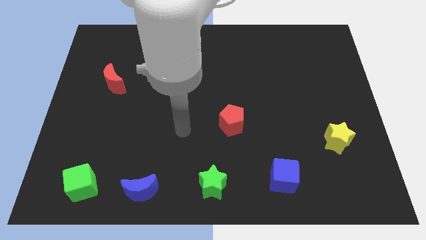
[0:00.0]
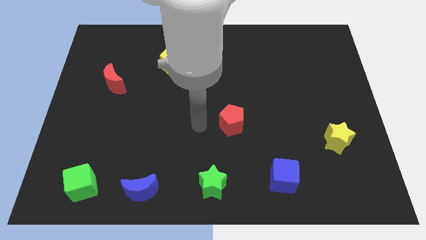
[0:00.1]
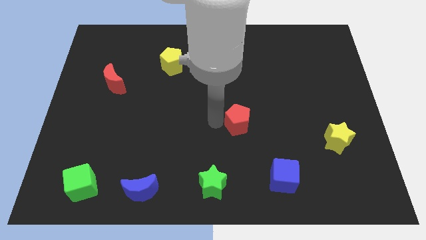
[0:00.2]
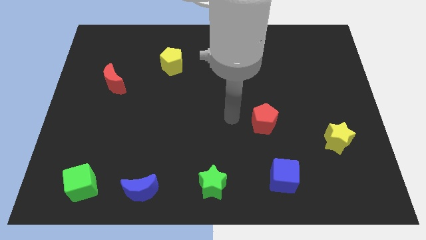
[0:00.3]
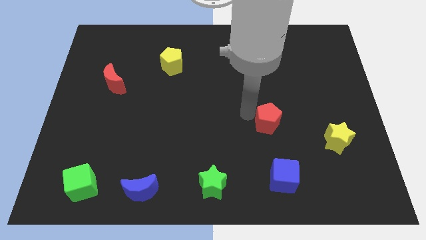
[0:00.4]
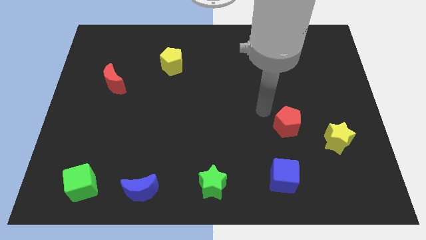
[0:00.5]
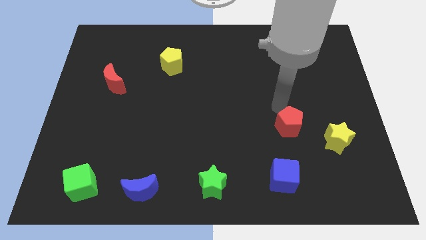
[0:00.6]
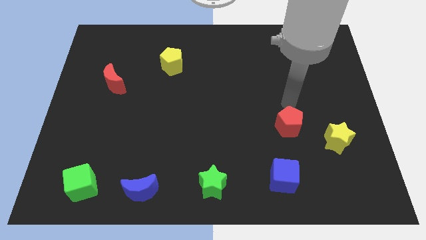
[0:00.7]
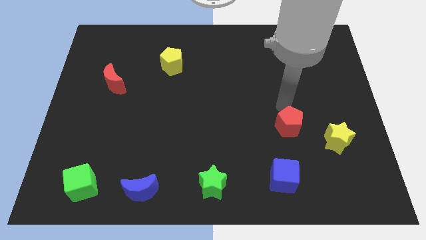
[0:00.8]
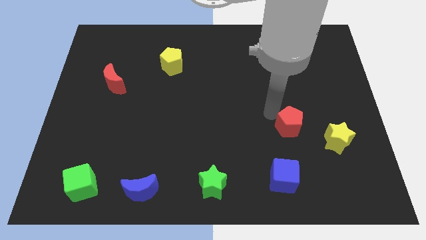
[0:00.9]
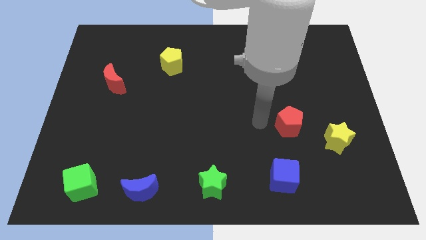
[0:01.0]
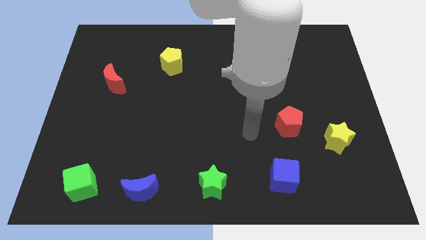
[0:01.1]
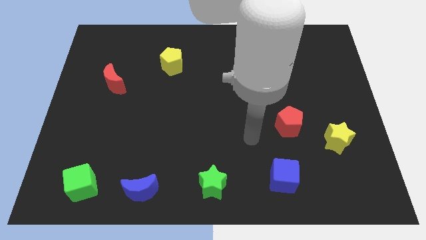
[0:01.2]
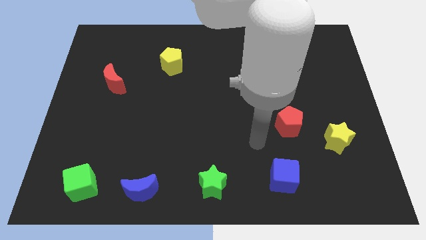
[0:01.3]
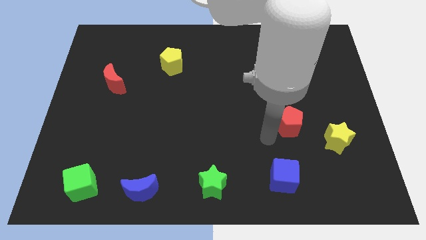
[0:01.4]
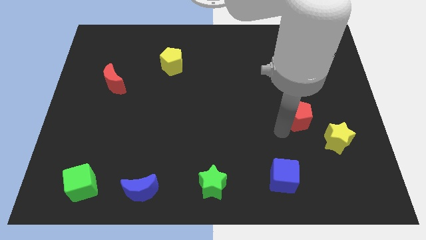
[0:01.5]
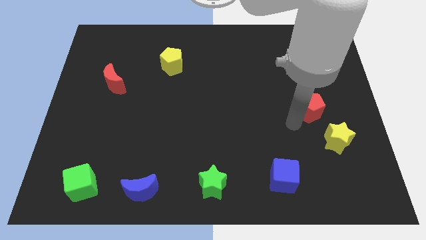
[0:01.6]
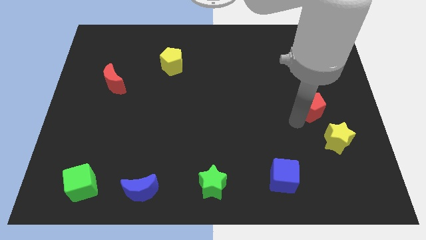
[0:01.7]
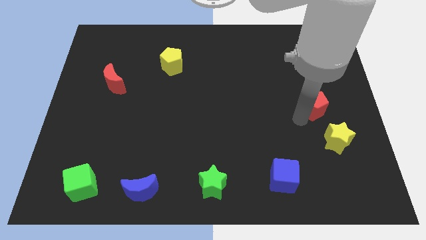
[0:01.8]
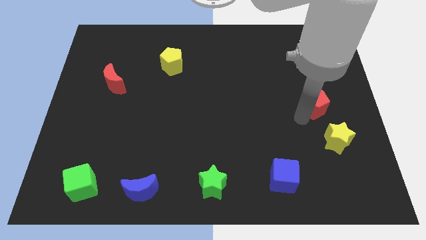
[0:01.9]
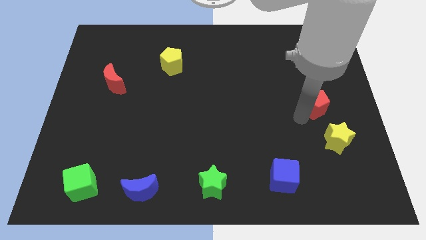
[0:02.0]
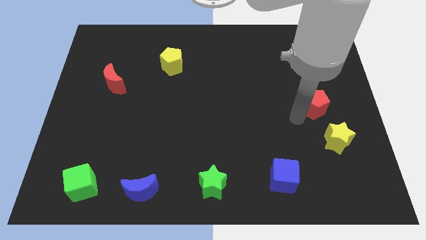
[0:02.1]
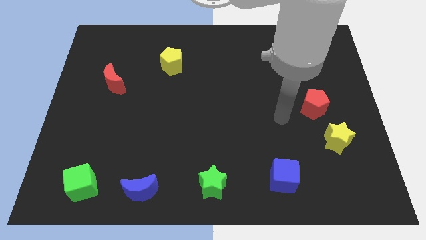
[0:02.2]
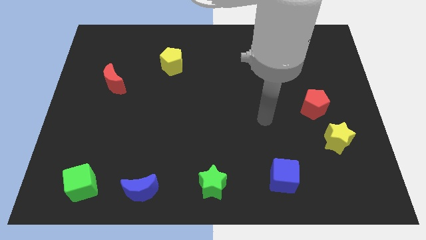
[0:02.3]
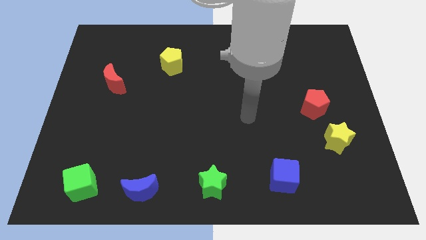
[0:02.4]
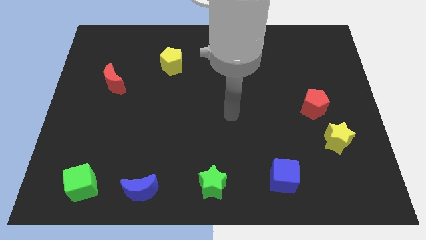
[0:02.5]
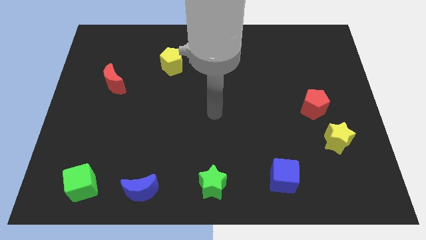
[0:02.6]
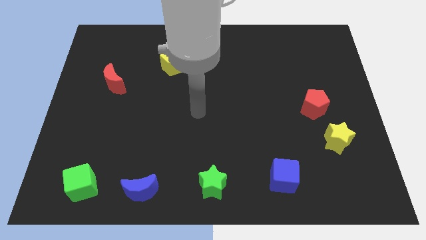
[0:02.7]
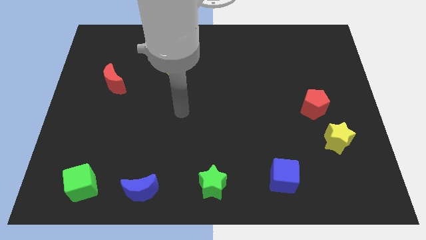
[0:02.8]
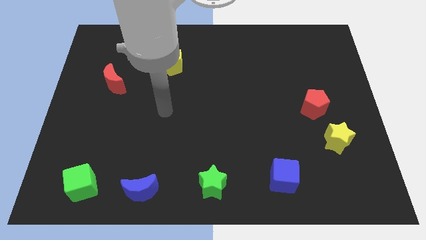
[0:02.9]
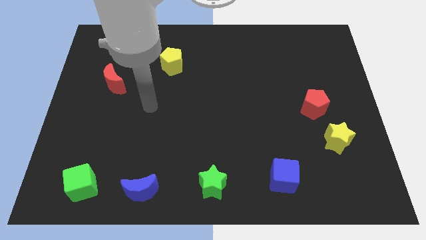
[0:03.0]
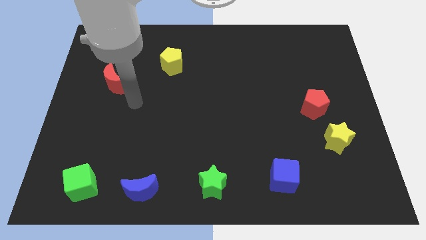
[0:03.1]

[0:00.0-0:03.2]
place the red pentagon diagonally top left of the yellow star

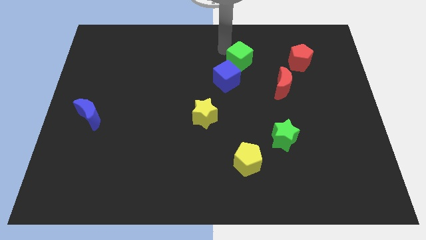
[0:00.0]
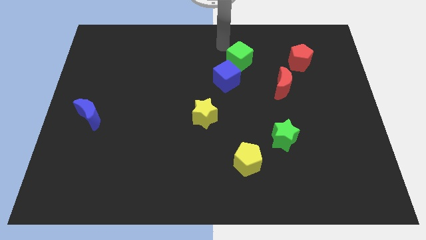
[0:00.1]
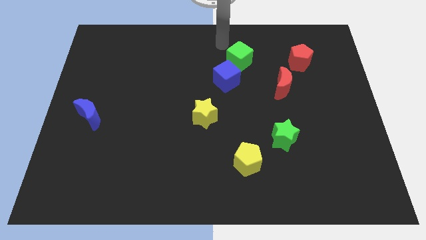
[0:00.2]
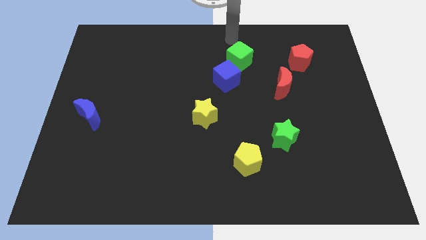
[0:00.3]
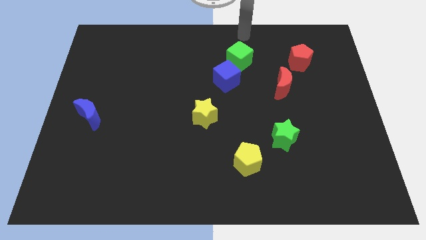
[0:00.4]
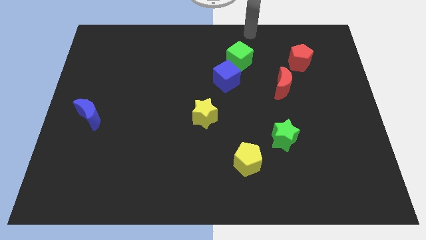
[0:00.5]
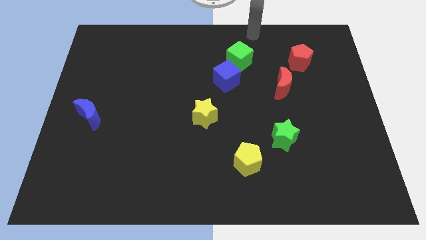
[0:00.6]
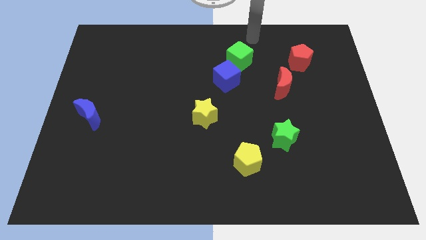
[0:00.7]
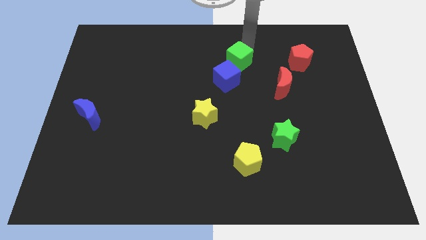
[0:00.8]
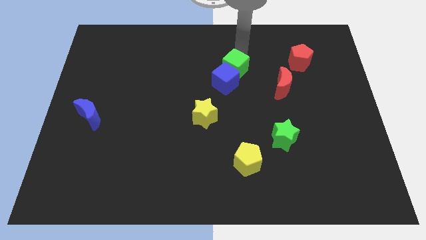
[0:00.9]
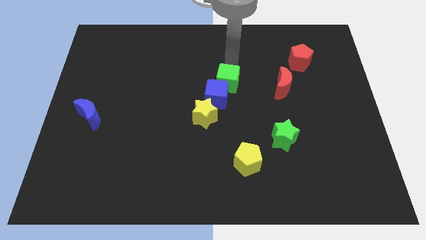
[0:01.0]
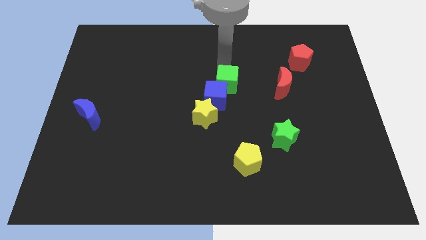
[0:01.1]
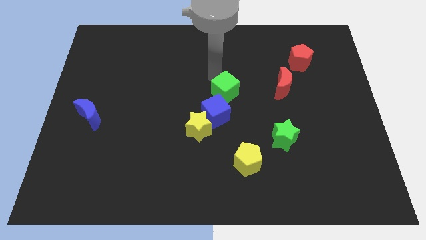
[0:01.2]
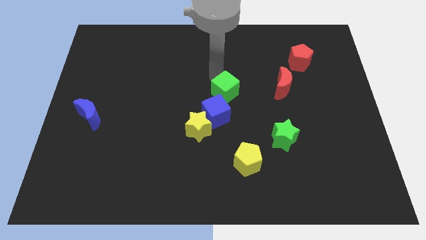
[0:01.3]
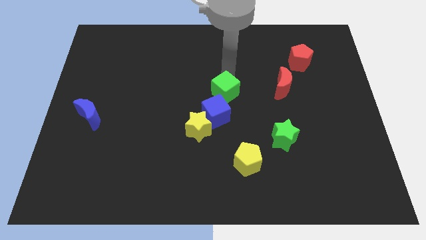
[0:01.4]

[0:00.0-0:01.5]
slide green cube along with the blue cube into the yellow star

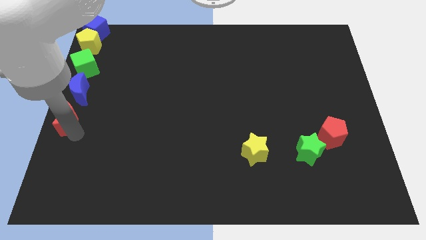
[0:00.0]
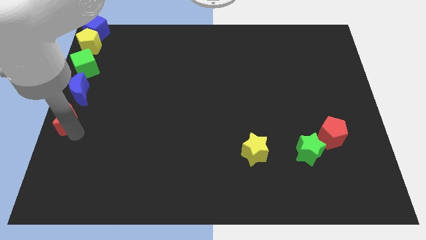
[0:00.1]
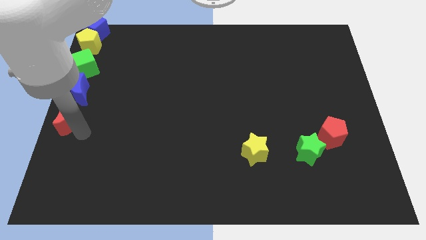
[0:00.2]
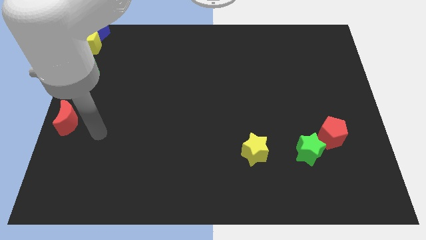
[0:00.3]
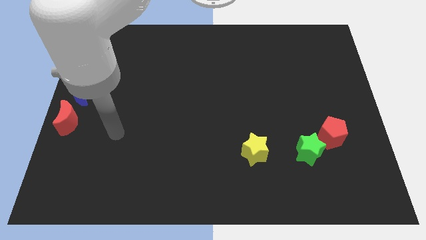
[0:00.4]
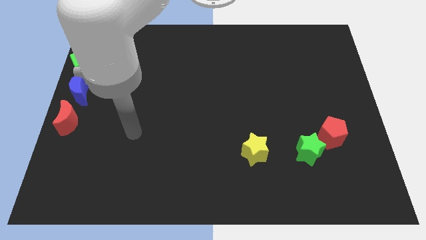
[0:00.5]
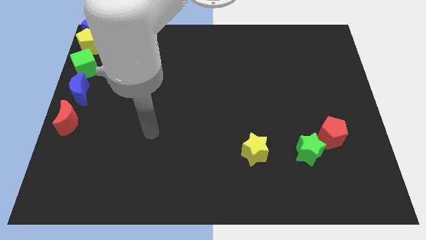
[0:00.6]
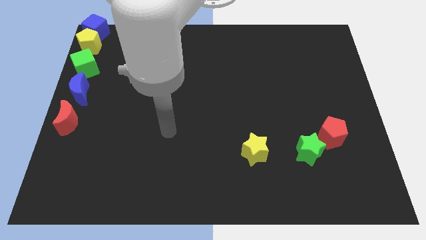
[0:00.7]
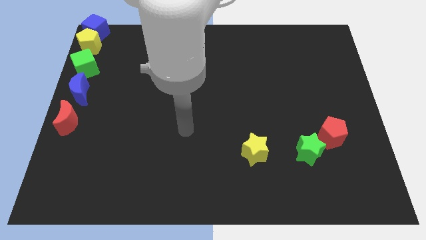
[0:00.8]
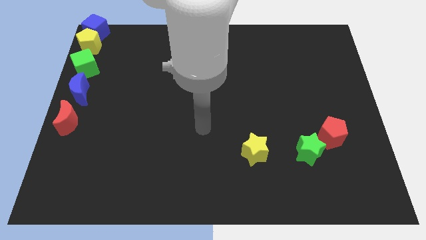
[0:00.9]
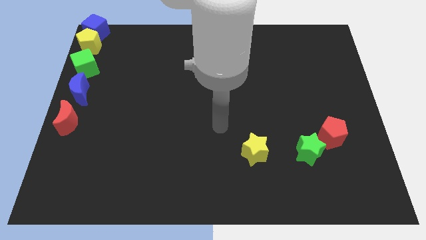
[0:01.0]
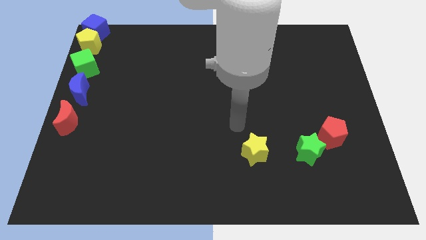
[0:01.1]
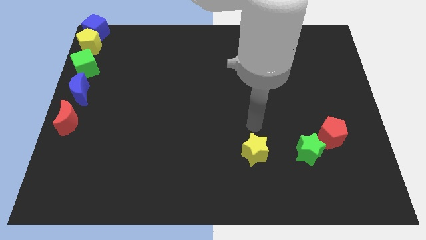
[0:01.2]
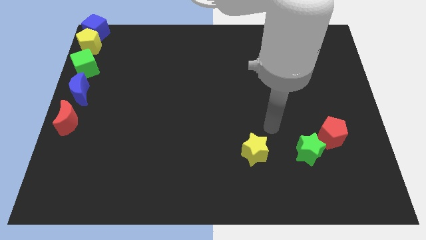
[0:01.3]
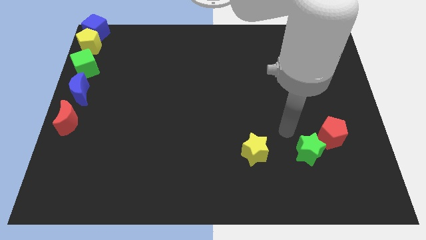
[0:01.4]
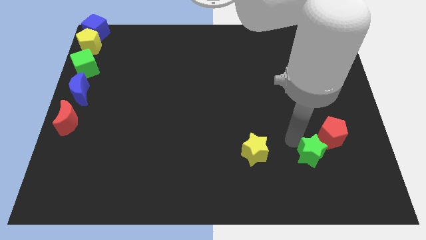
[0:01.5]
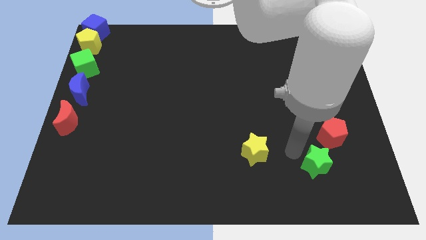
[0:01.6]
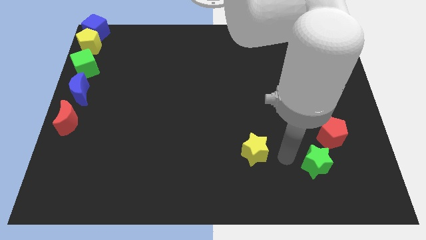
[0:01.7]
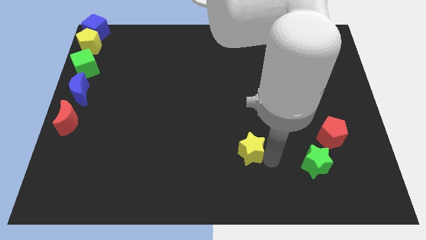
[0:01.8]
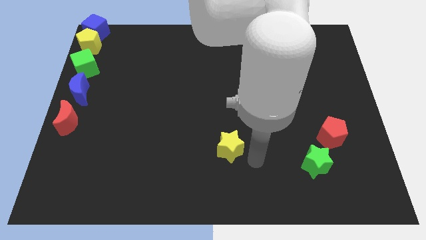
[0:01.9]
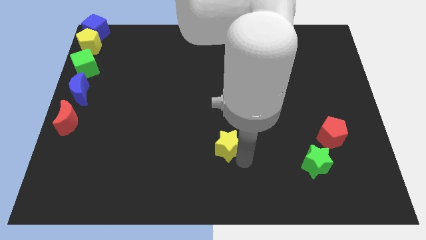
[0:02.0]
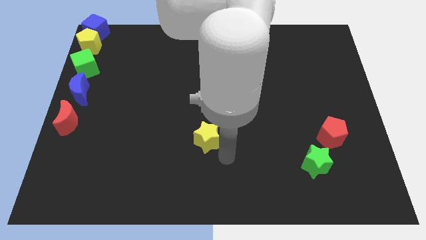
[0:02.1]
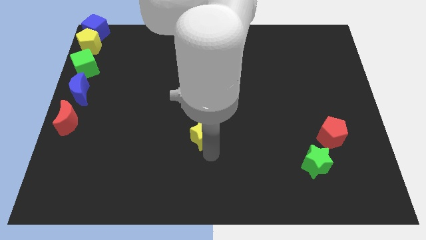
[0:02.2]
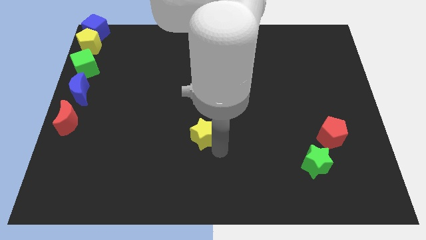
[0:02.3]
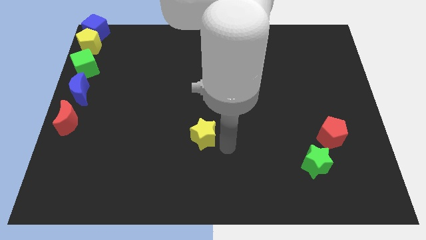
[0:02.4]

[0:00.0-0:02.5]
move the yellow star towards the centre of the board

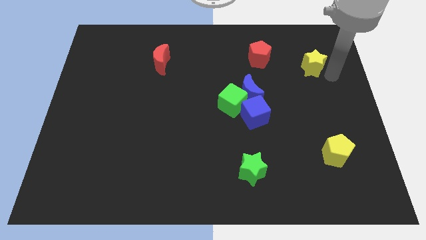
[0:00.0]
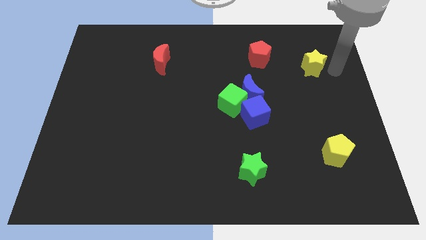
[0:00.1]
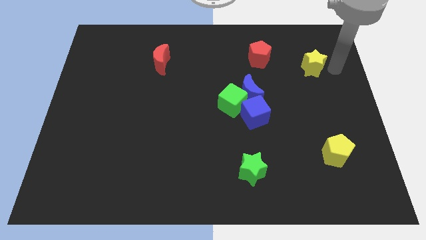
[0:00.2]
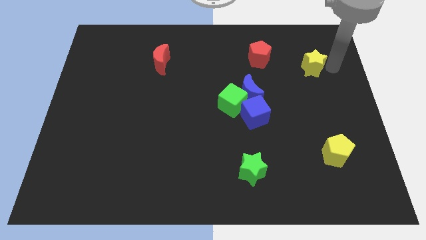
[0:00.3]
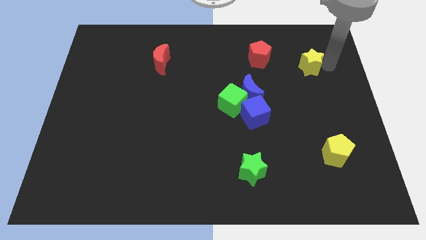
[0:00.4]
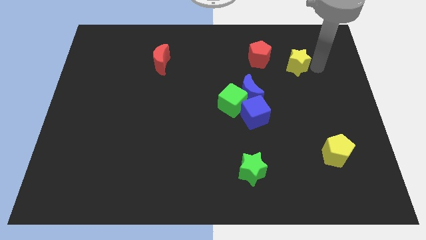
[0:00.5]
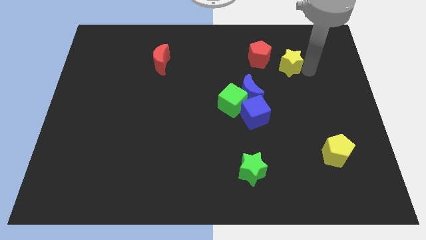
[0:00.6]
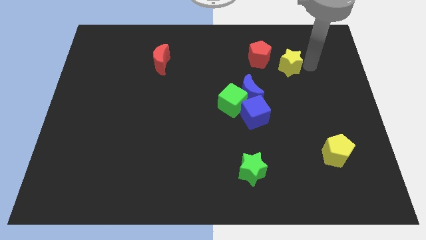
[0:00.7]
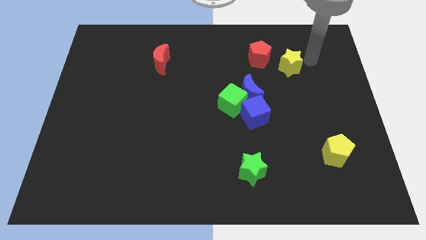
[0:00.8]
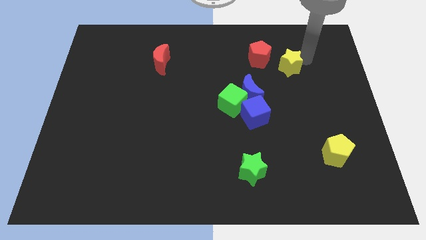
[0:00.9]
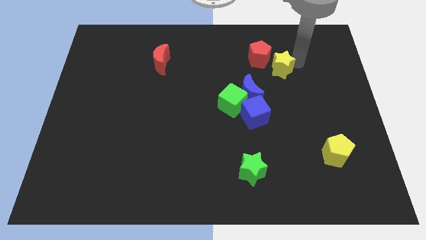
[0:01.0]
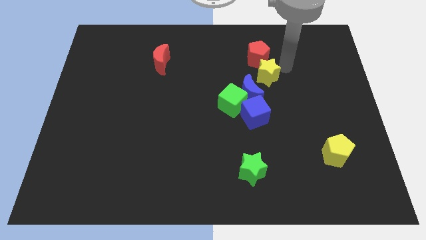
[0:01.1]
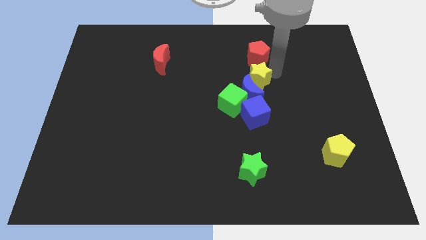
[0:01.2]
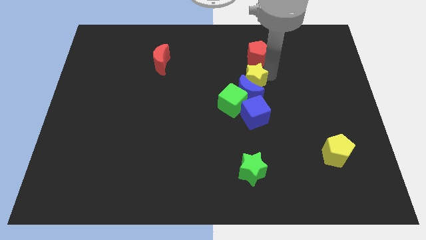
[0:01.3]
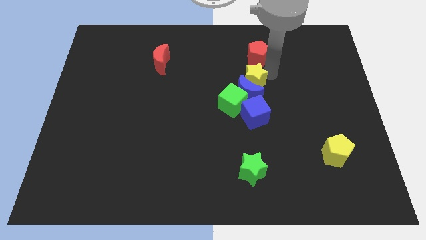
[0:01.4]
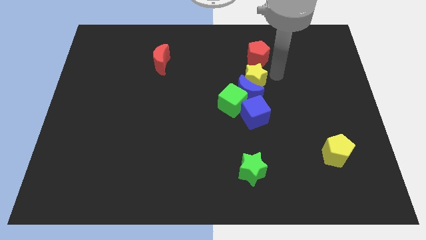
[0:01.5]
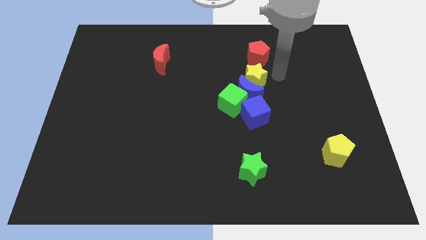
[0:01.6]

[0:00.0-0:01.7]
slide the yellow star vertically below the red pentagon
